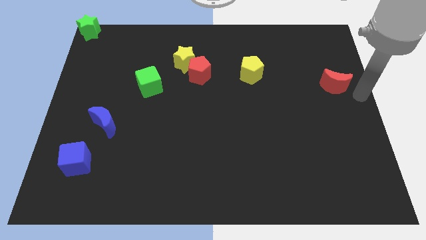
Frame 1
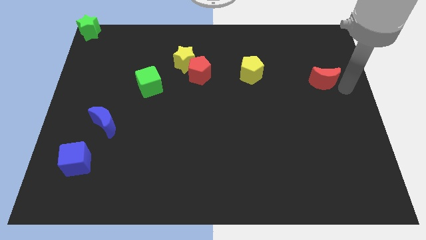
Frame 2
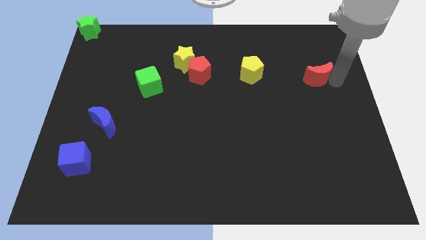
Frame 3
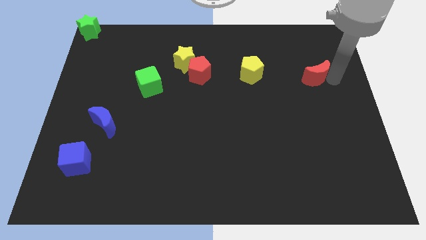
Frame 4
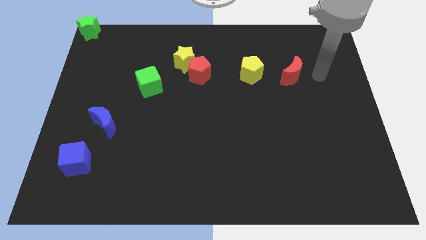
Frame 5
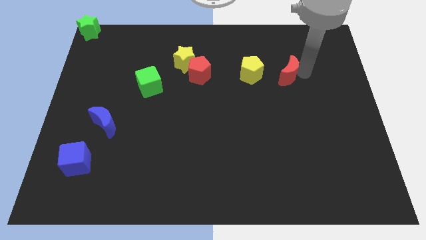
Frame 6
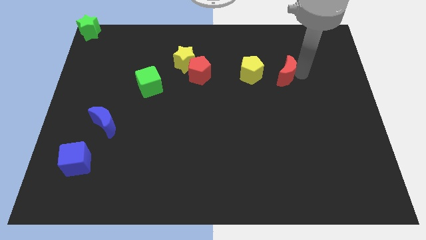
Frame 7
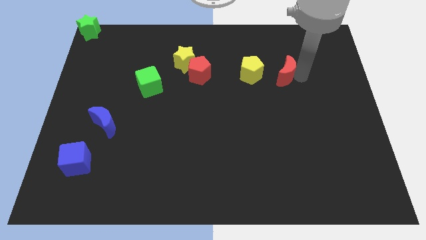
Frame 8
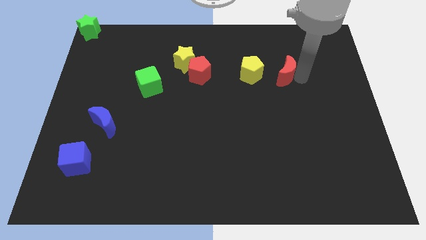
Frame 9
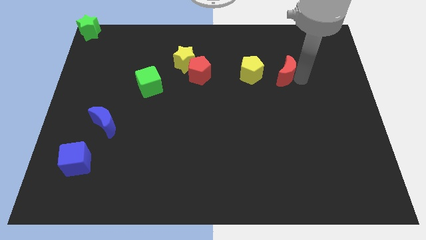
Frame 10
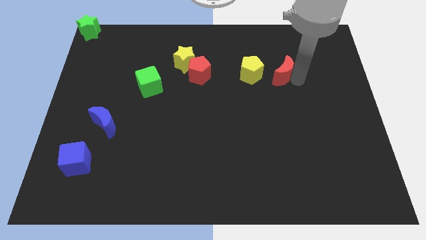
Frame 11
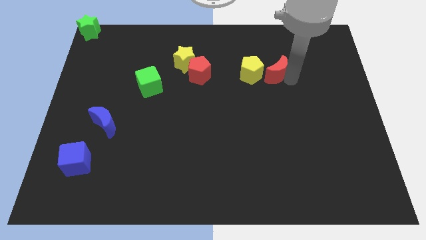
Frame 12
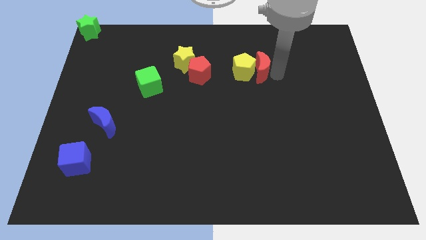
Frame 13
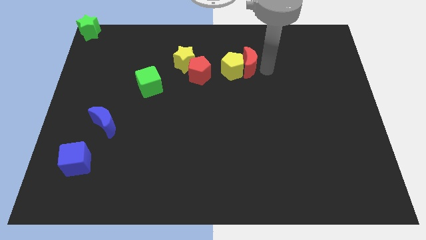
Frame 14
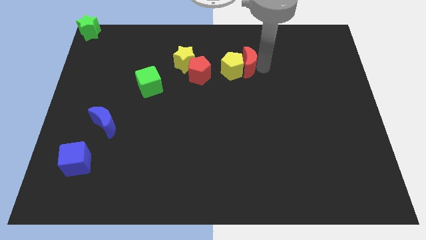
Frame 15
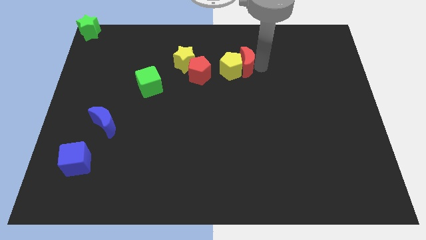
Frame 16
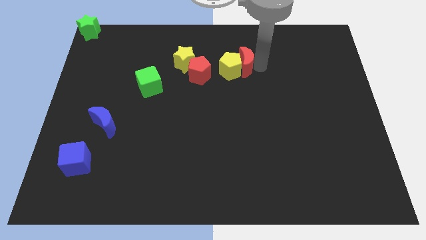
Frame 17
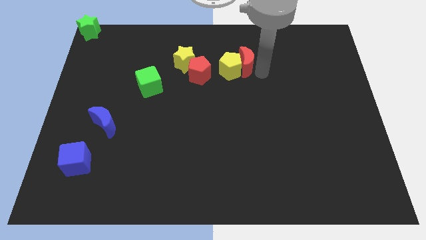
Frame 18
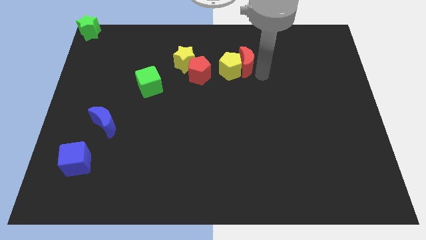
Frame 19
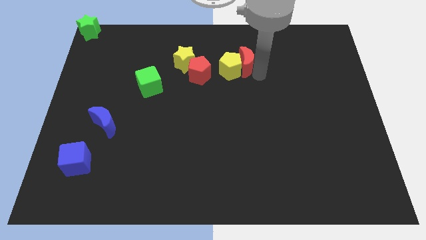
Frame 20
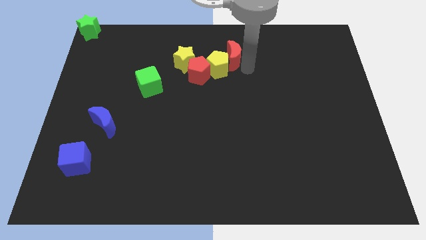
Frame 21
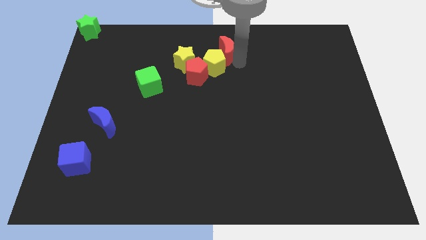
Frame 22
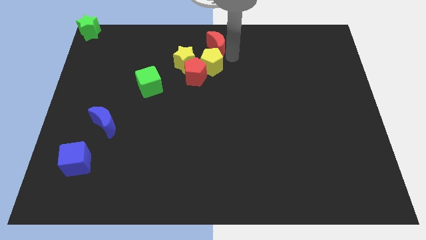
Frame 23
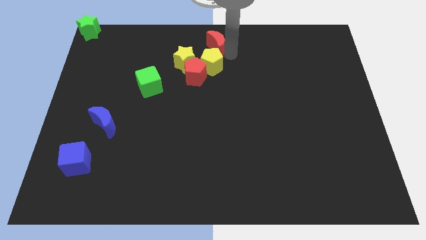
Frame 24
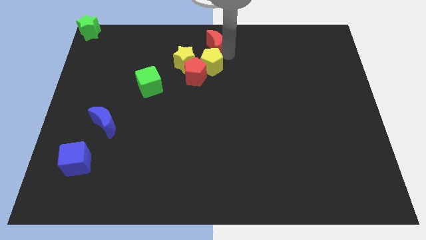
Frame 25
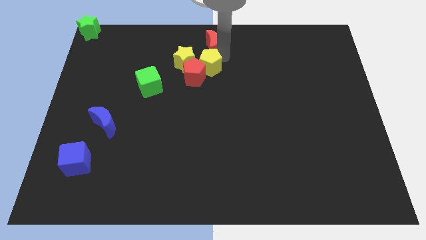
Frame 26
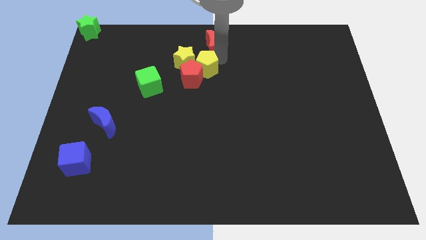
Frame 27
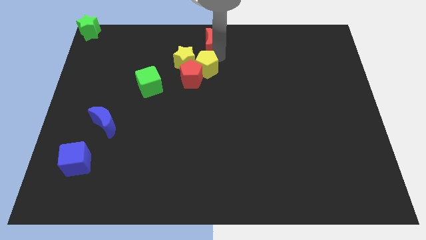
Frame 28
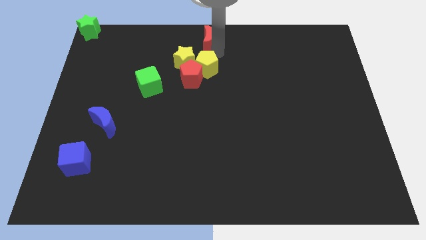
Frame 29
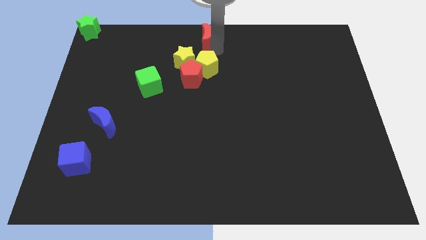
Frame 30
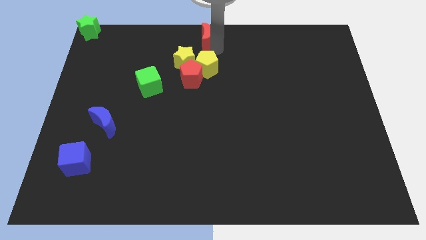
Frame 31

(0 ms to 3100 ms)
move the red crescent into the yellow pentagon

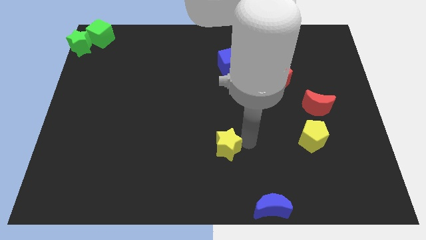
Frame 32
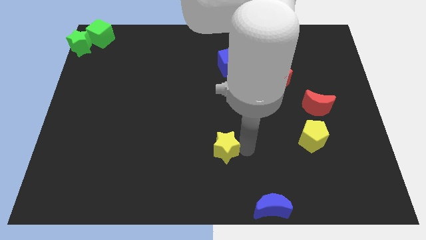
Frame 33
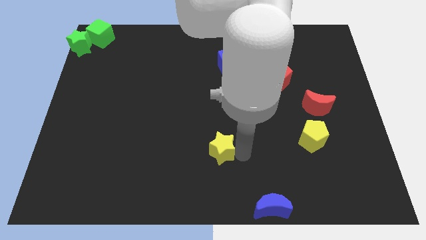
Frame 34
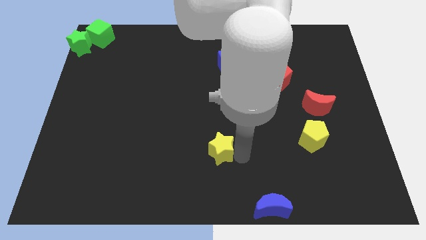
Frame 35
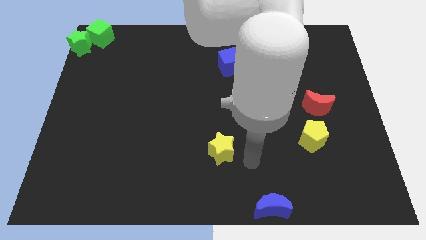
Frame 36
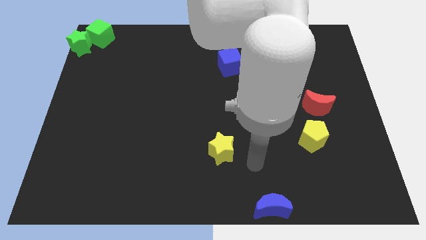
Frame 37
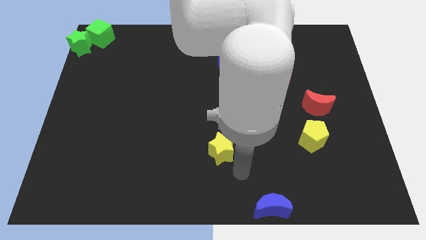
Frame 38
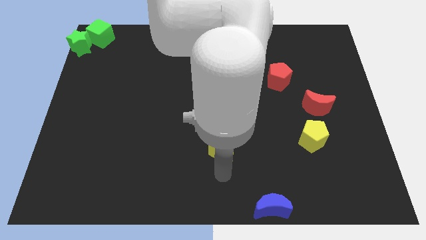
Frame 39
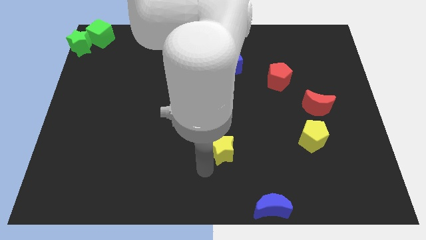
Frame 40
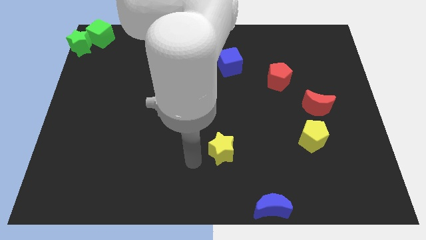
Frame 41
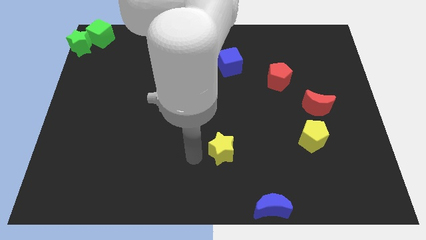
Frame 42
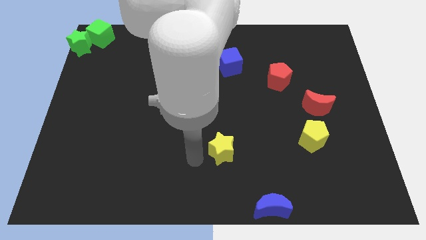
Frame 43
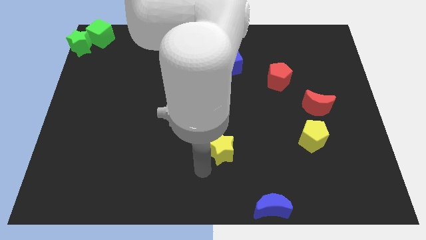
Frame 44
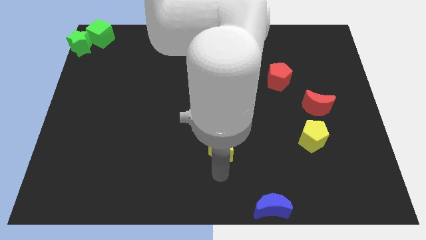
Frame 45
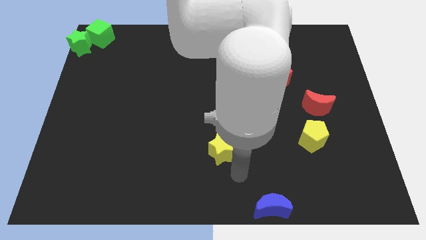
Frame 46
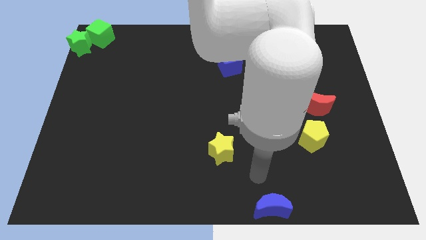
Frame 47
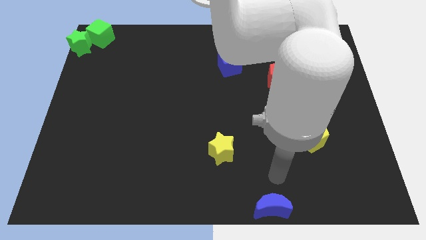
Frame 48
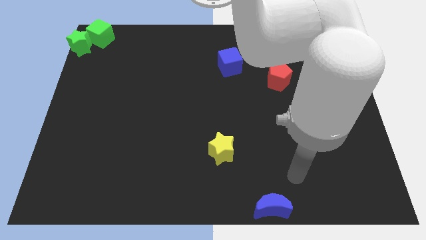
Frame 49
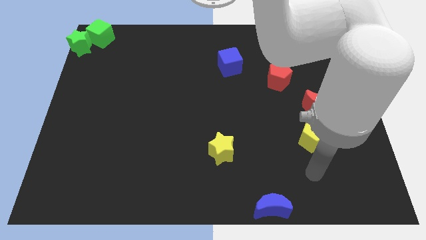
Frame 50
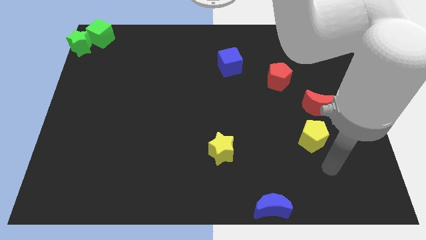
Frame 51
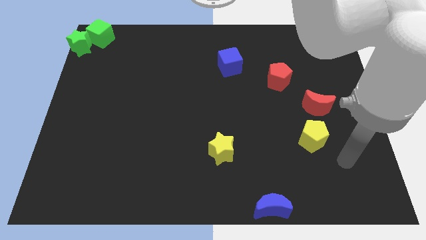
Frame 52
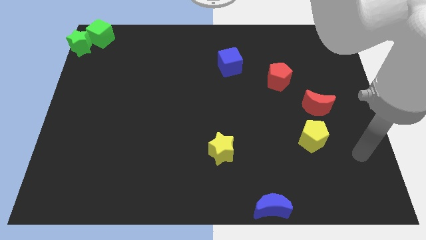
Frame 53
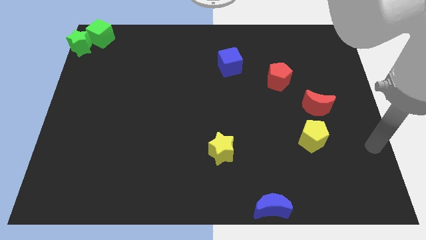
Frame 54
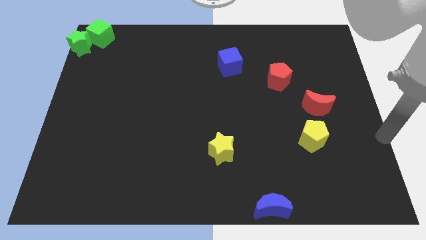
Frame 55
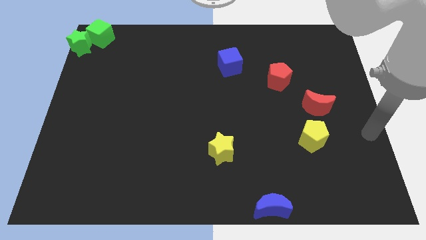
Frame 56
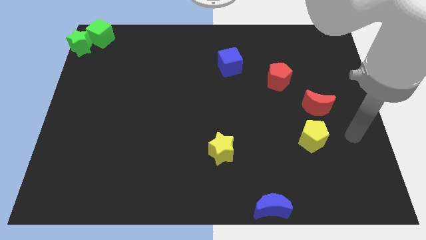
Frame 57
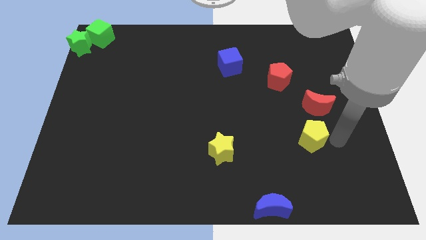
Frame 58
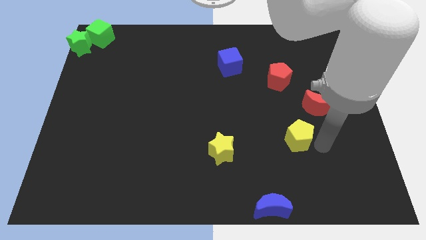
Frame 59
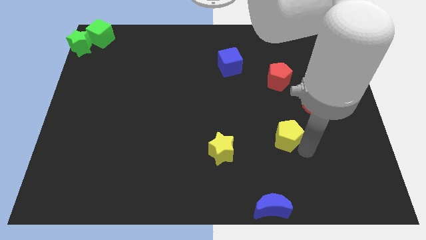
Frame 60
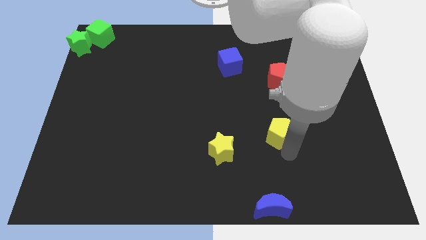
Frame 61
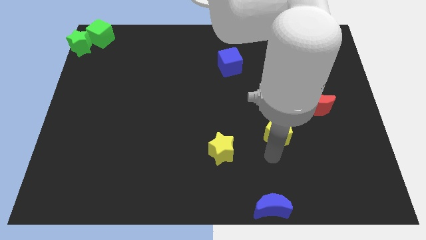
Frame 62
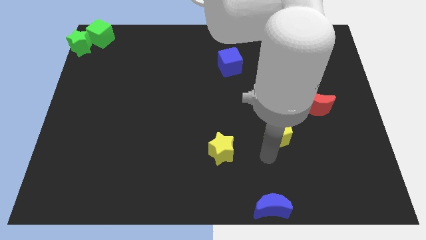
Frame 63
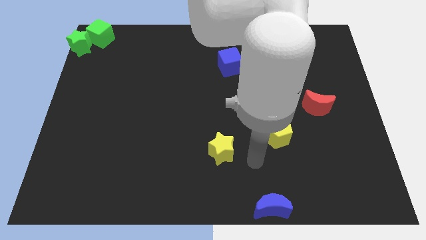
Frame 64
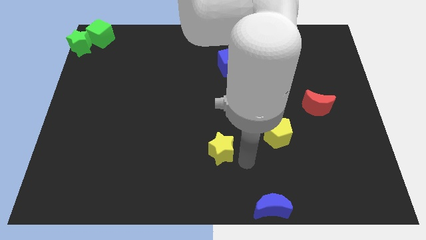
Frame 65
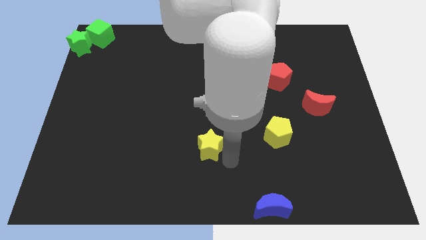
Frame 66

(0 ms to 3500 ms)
place yellow pentagon vertical below the red pentagon

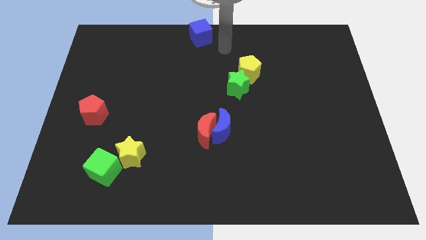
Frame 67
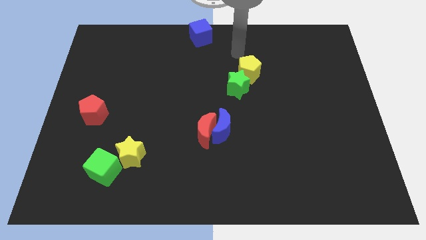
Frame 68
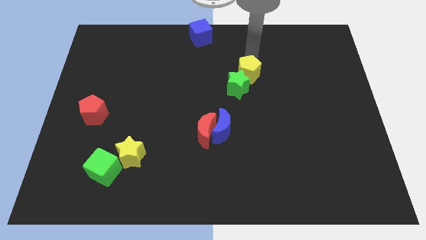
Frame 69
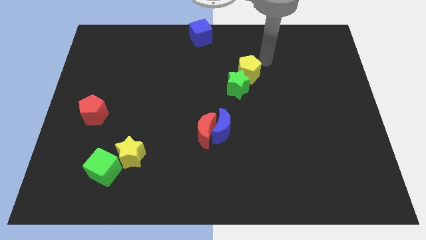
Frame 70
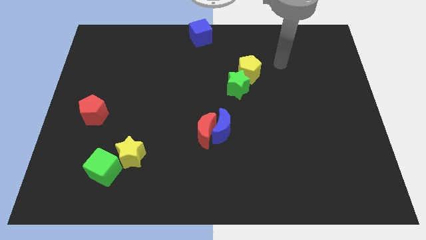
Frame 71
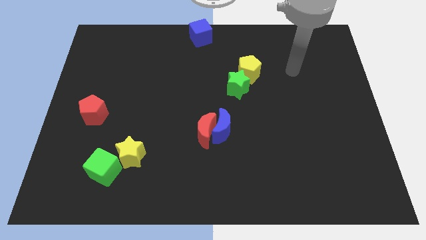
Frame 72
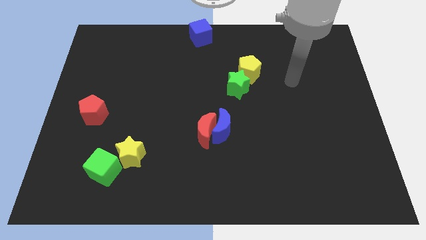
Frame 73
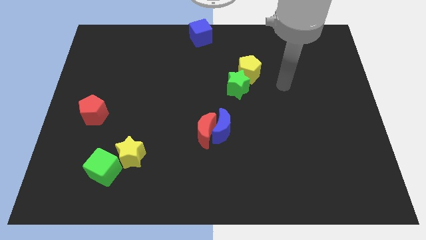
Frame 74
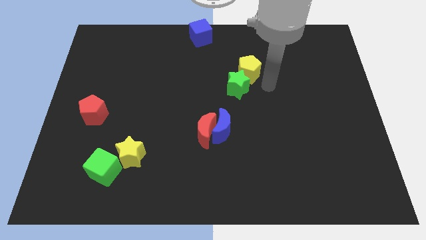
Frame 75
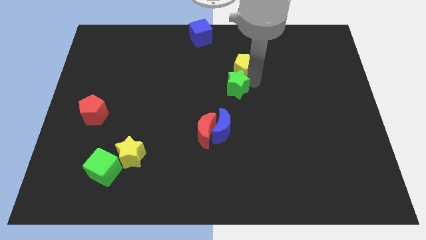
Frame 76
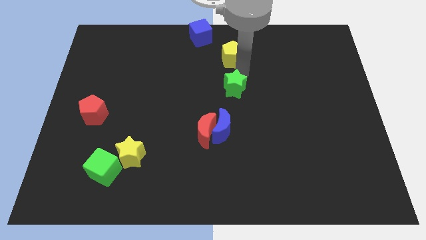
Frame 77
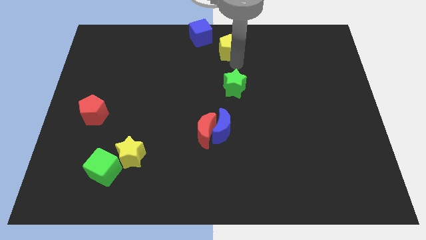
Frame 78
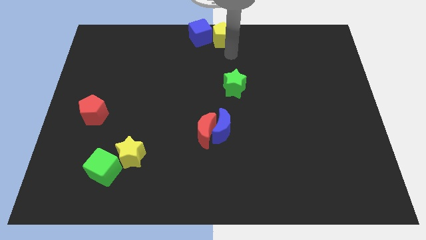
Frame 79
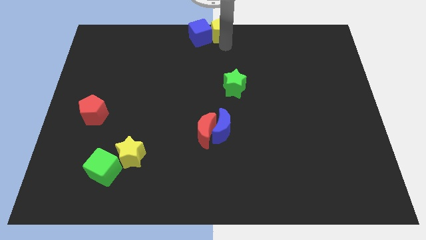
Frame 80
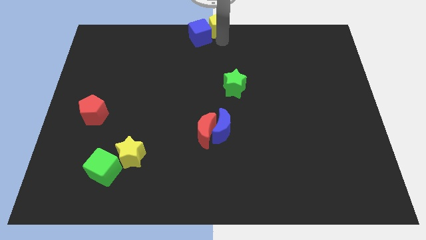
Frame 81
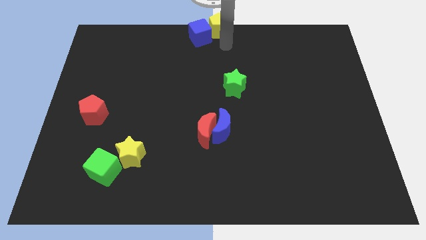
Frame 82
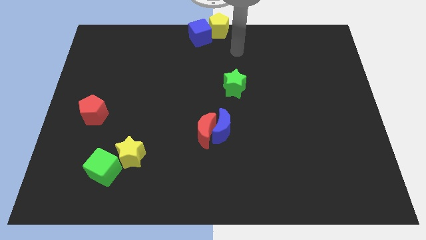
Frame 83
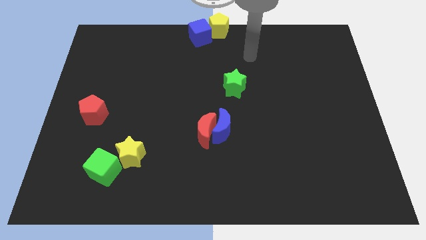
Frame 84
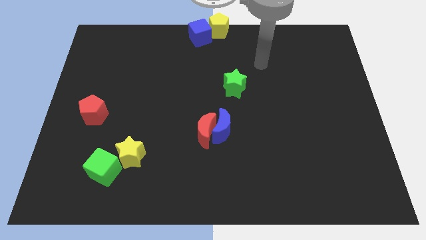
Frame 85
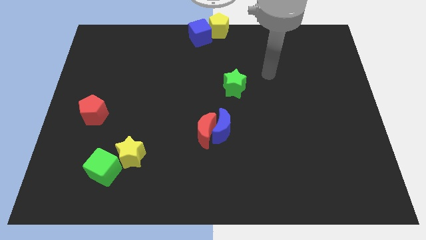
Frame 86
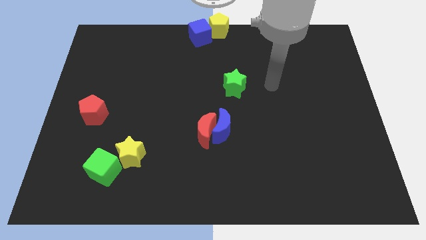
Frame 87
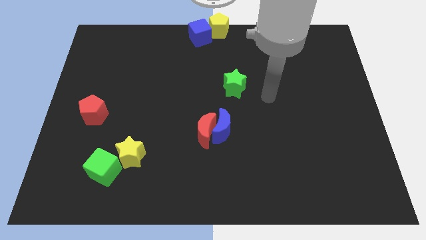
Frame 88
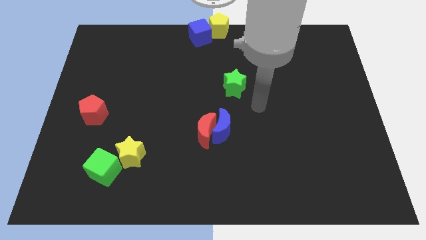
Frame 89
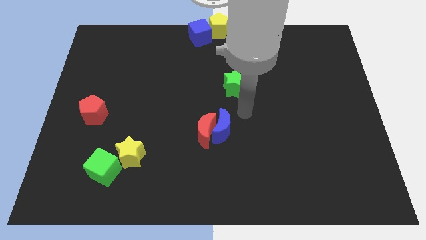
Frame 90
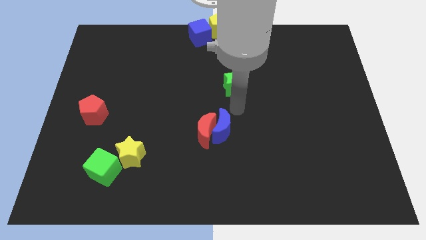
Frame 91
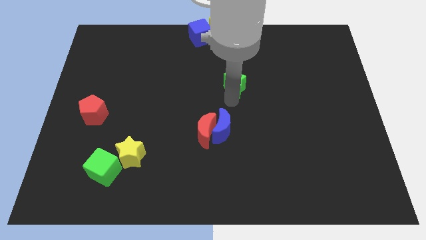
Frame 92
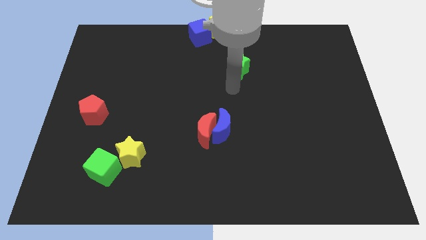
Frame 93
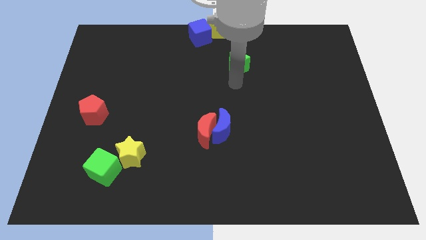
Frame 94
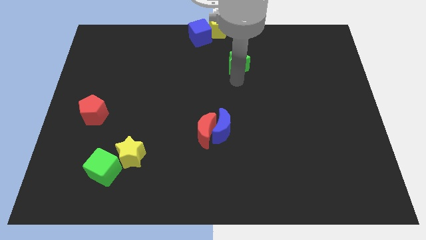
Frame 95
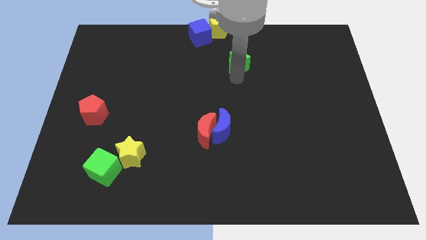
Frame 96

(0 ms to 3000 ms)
move the yellow pentagon right to the blue cube
